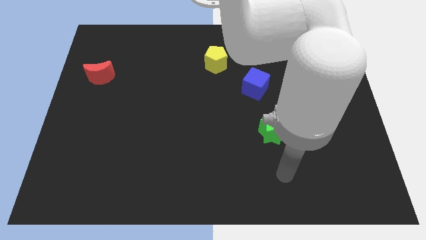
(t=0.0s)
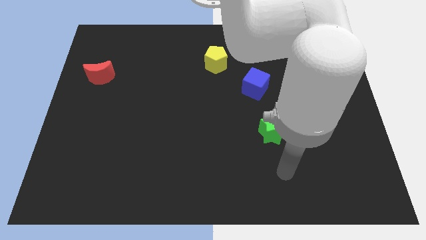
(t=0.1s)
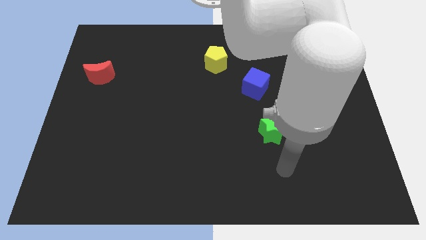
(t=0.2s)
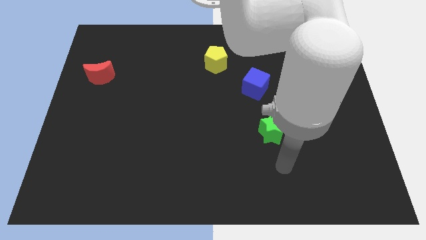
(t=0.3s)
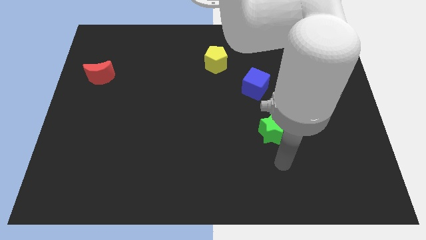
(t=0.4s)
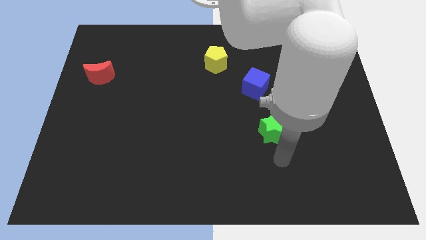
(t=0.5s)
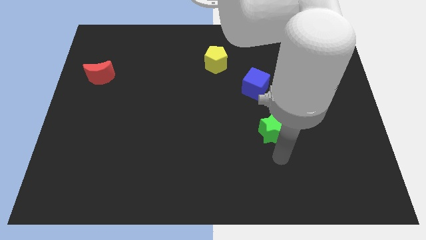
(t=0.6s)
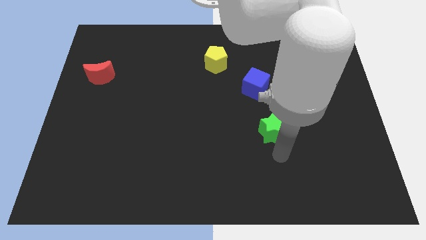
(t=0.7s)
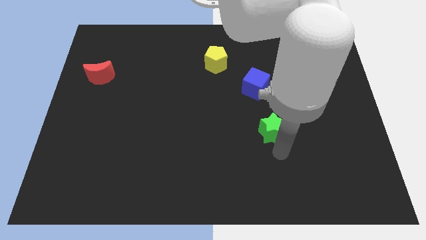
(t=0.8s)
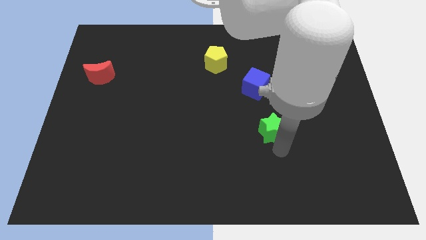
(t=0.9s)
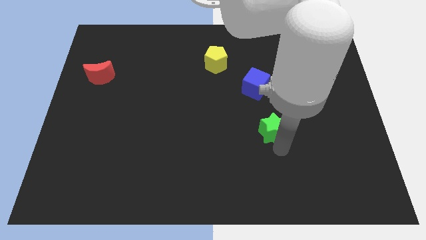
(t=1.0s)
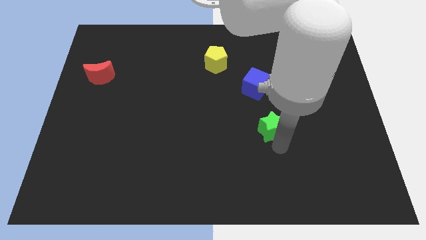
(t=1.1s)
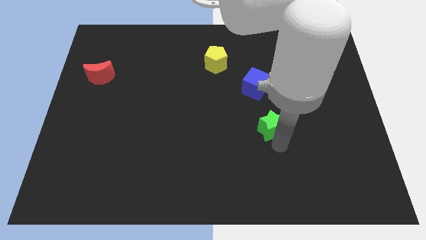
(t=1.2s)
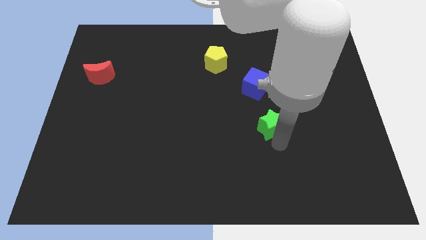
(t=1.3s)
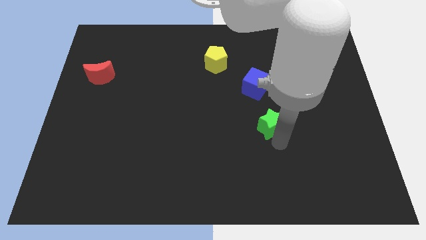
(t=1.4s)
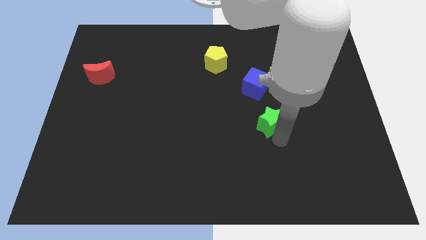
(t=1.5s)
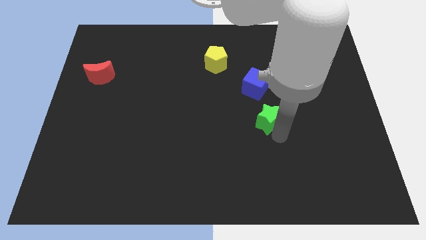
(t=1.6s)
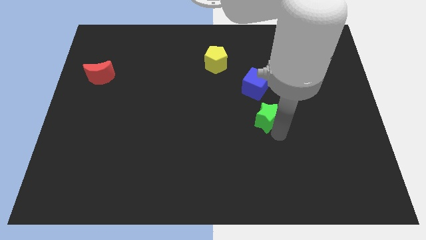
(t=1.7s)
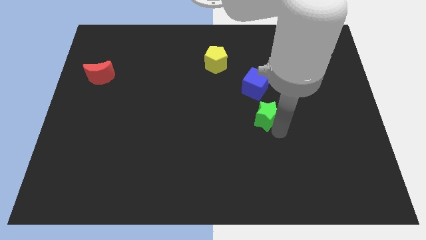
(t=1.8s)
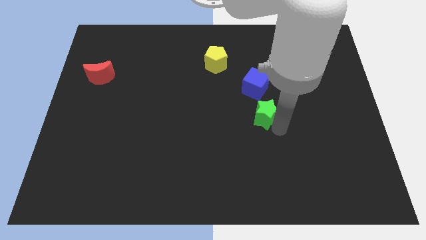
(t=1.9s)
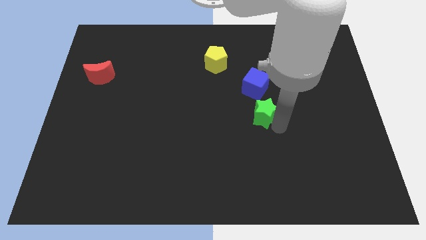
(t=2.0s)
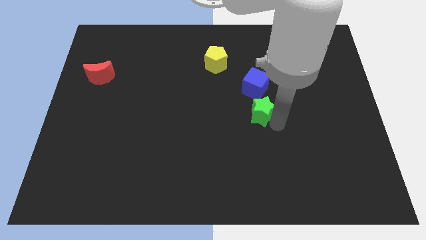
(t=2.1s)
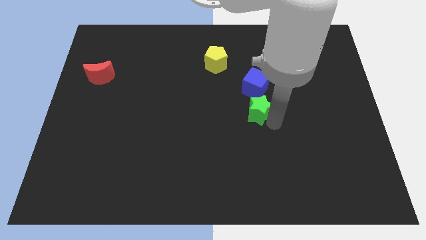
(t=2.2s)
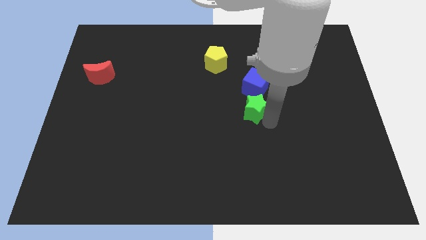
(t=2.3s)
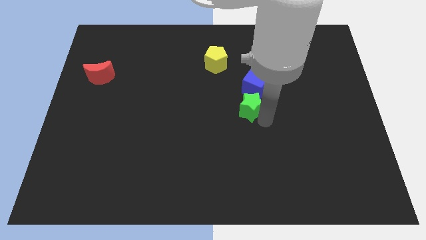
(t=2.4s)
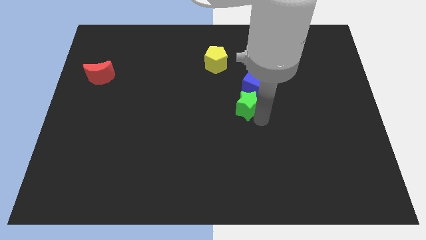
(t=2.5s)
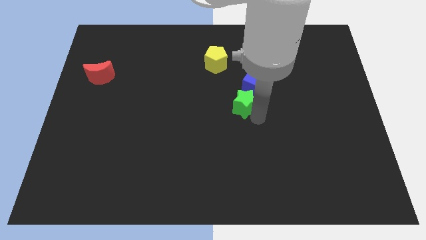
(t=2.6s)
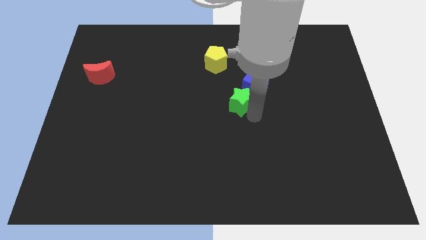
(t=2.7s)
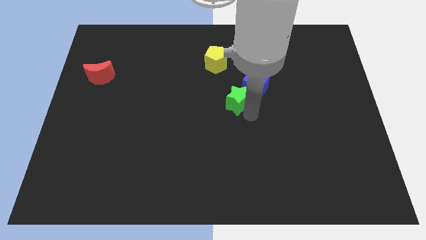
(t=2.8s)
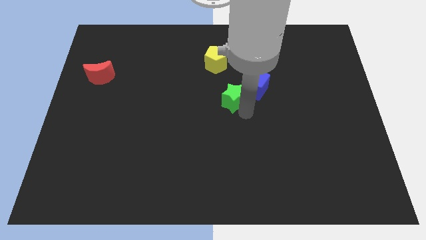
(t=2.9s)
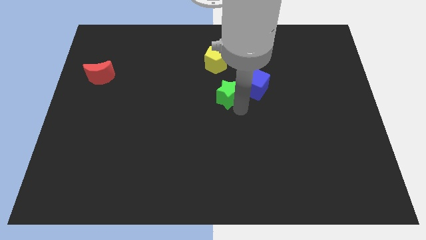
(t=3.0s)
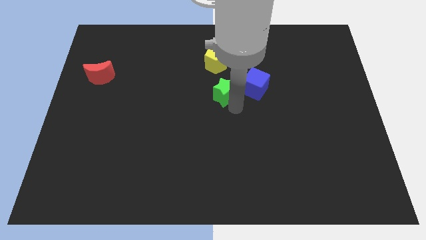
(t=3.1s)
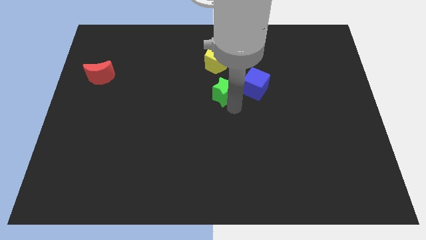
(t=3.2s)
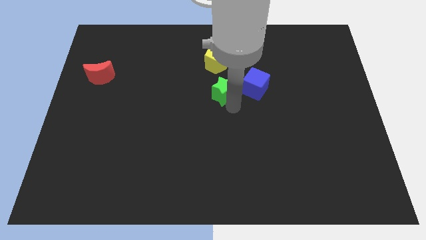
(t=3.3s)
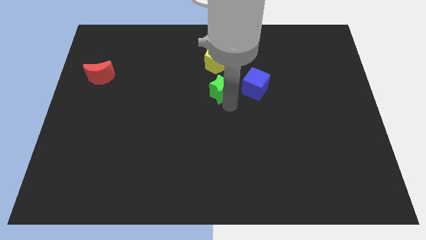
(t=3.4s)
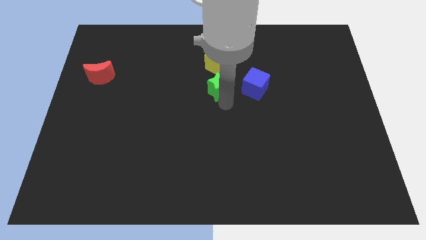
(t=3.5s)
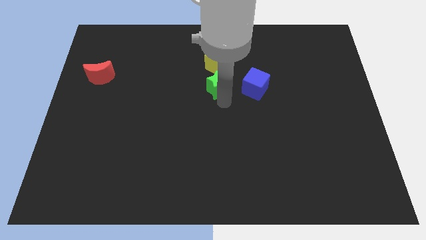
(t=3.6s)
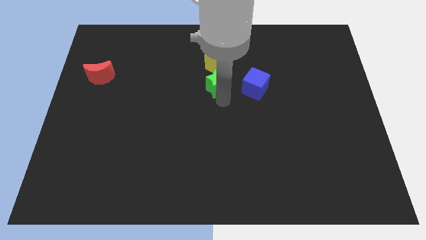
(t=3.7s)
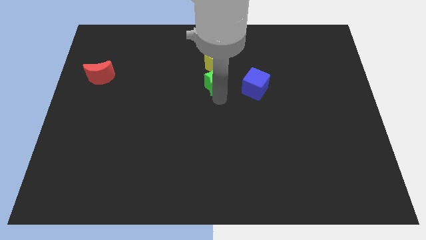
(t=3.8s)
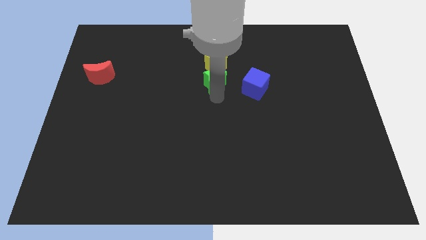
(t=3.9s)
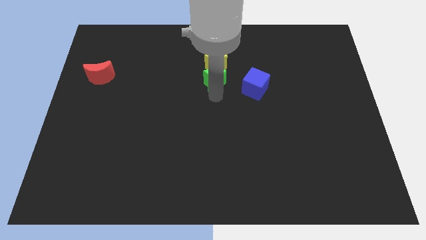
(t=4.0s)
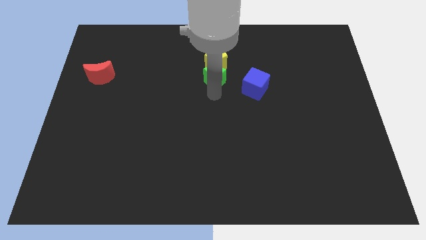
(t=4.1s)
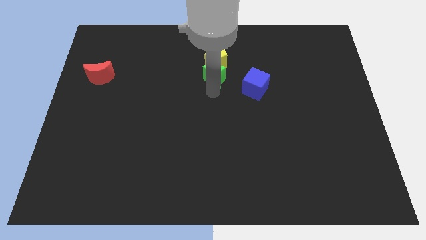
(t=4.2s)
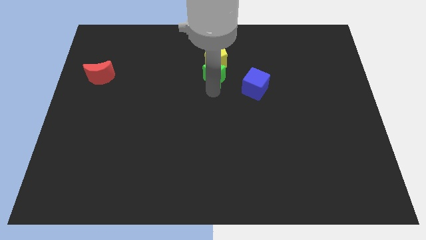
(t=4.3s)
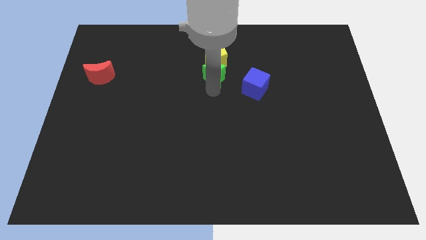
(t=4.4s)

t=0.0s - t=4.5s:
slide the green block close to the yellow pentagon

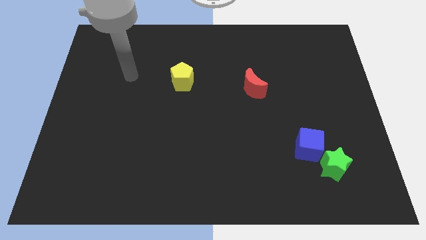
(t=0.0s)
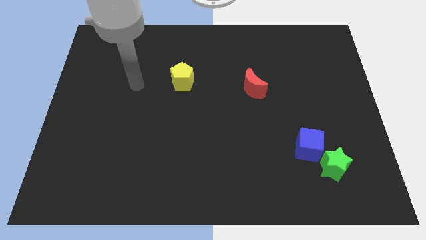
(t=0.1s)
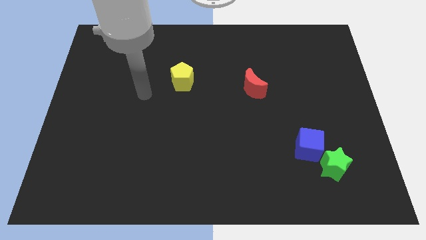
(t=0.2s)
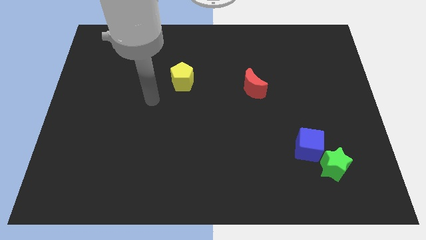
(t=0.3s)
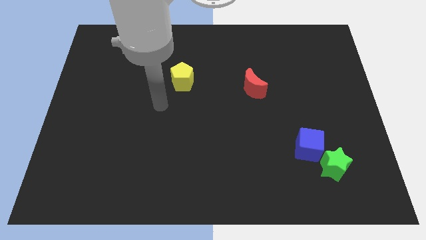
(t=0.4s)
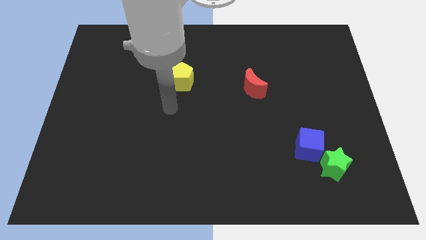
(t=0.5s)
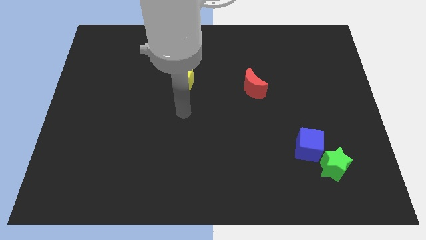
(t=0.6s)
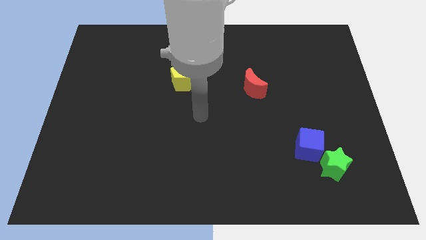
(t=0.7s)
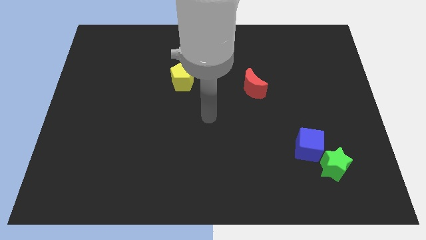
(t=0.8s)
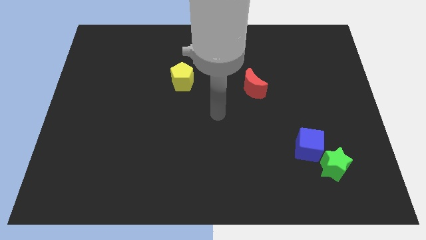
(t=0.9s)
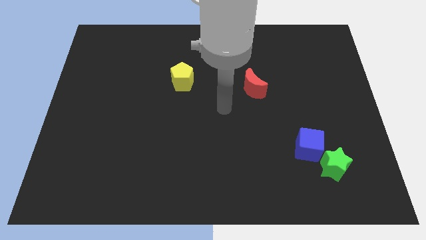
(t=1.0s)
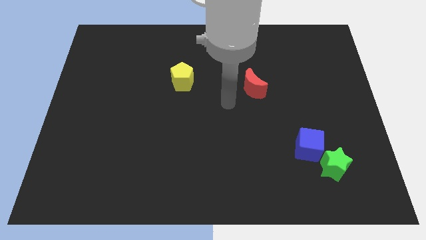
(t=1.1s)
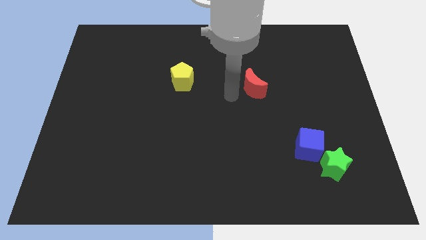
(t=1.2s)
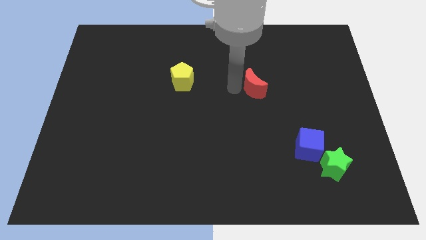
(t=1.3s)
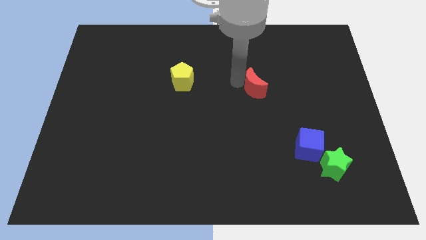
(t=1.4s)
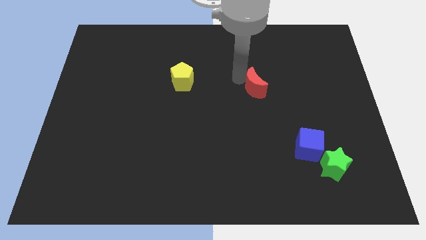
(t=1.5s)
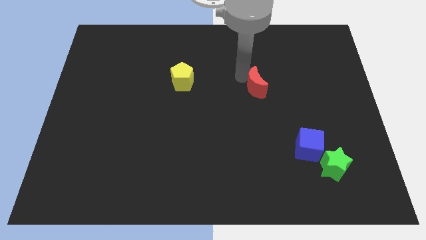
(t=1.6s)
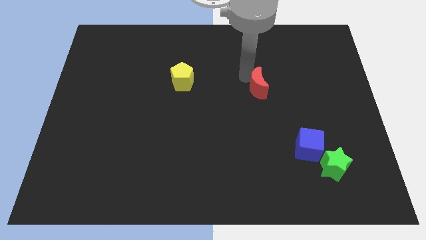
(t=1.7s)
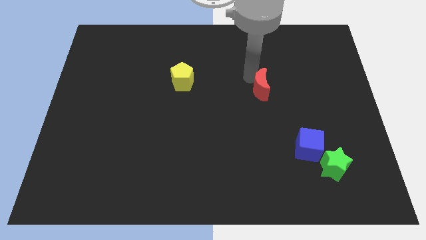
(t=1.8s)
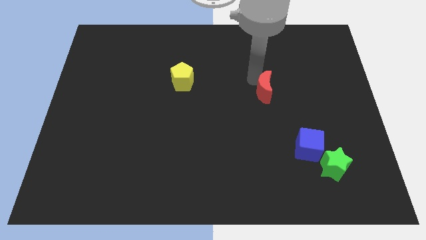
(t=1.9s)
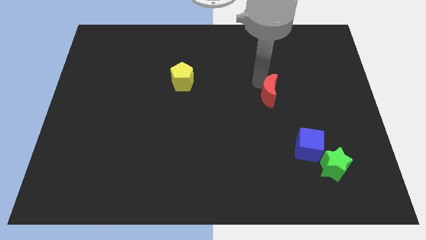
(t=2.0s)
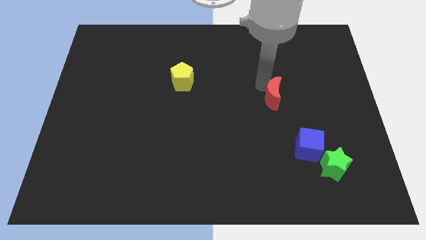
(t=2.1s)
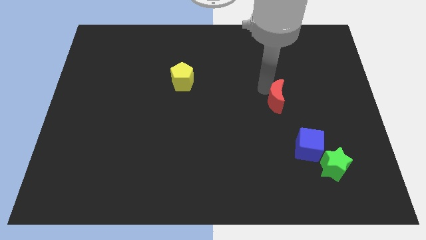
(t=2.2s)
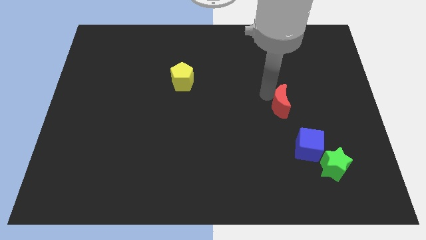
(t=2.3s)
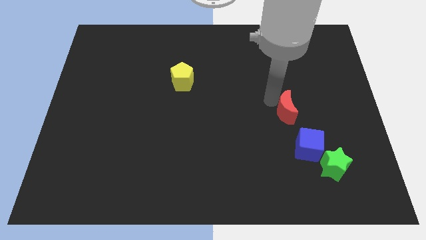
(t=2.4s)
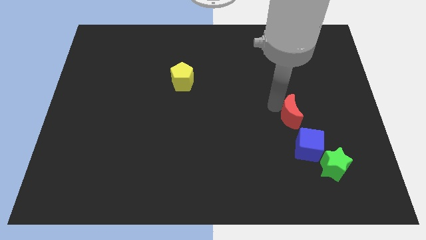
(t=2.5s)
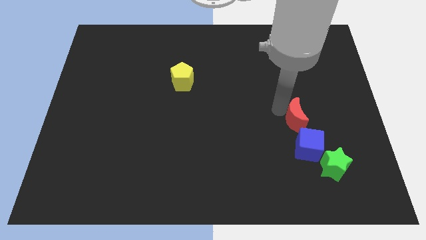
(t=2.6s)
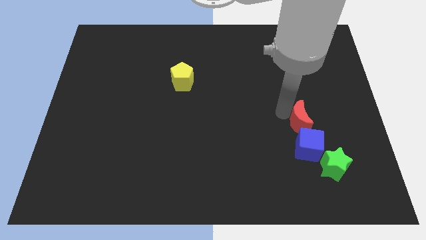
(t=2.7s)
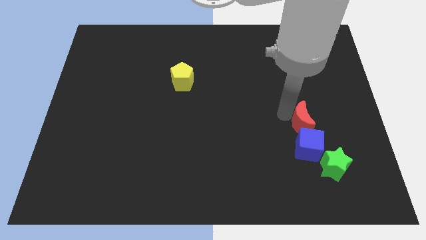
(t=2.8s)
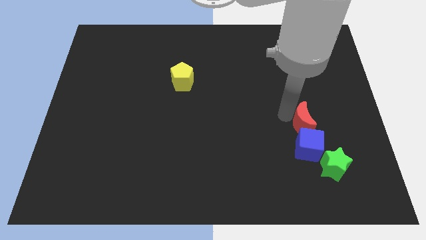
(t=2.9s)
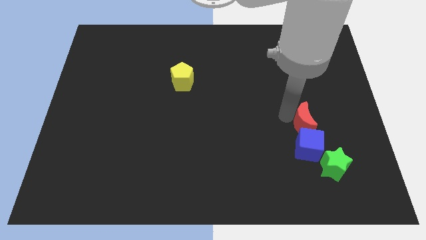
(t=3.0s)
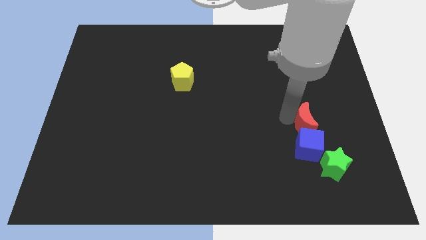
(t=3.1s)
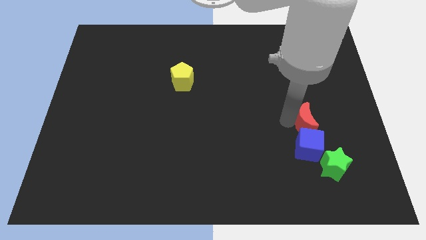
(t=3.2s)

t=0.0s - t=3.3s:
push the red moon close to the cube

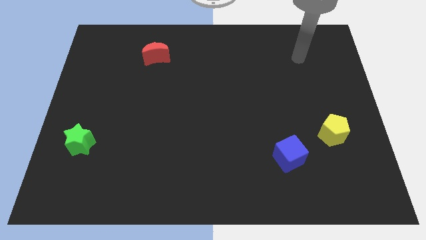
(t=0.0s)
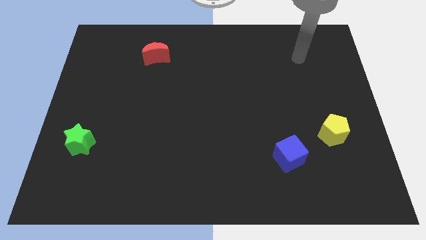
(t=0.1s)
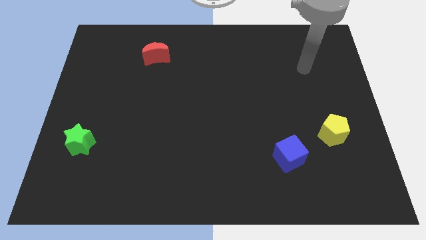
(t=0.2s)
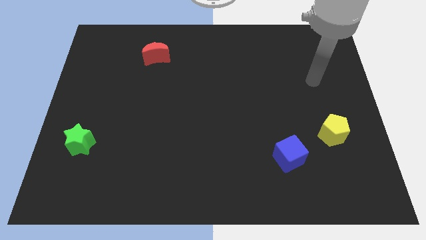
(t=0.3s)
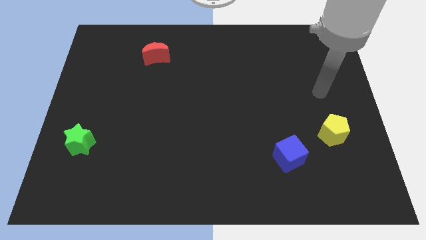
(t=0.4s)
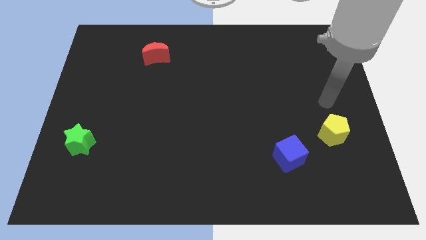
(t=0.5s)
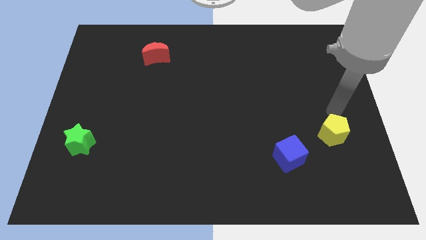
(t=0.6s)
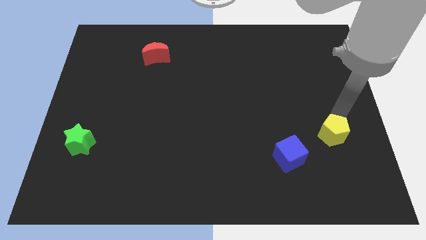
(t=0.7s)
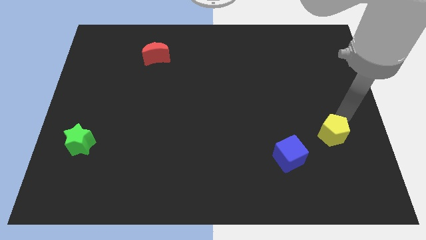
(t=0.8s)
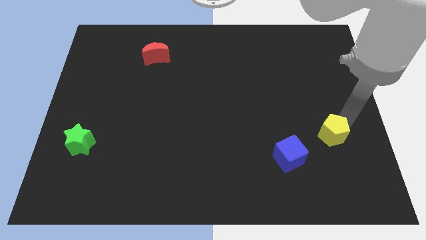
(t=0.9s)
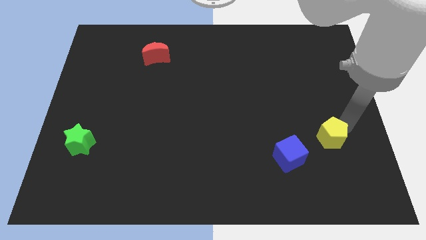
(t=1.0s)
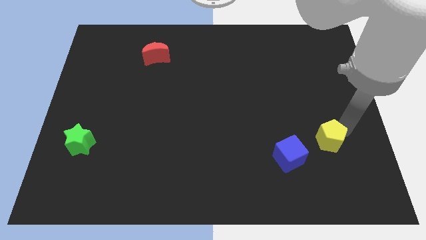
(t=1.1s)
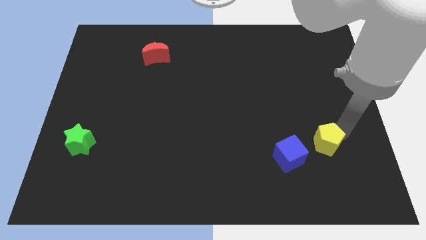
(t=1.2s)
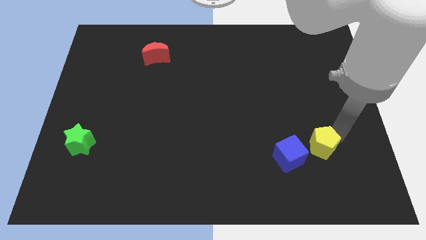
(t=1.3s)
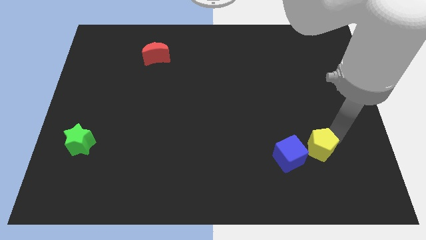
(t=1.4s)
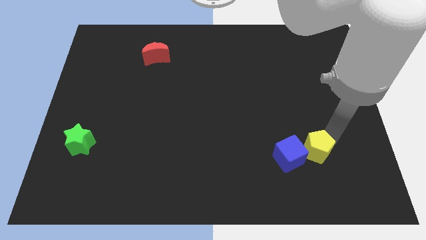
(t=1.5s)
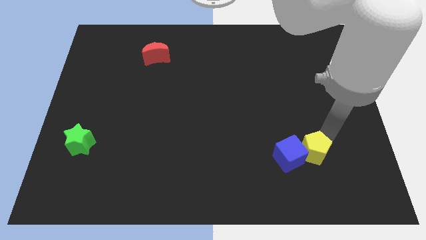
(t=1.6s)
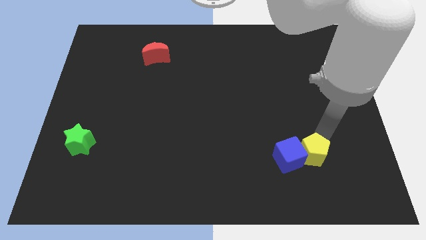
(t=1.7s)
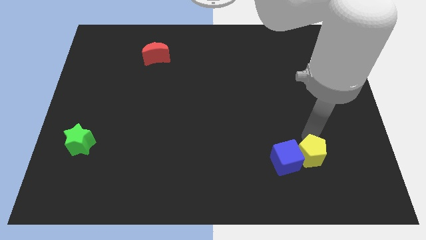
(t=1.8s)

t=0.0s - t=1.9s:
slide the yellow pentagon to the blue block
